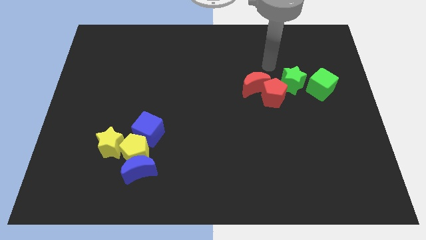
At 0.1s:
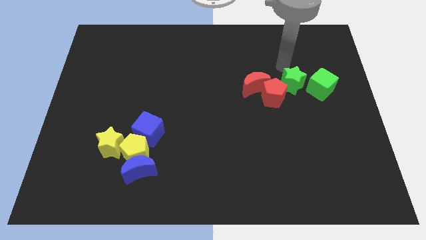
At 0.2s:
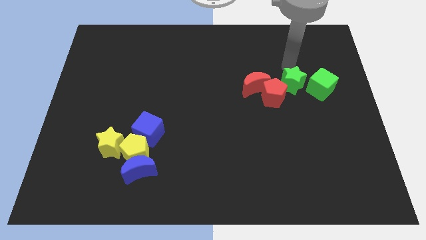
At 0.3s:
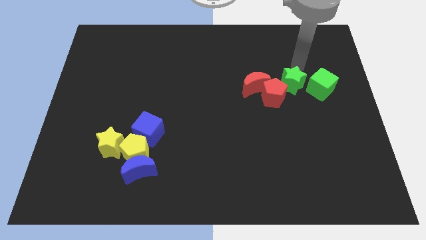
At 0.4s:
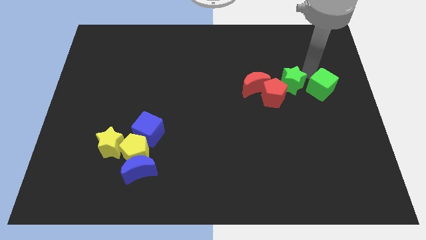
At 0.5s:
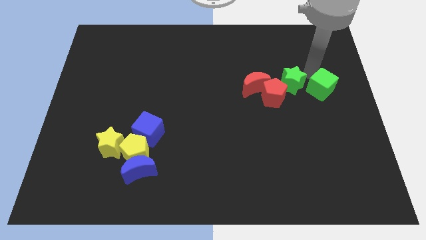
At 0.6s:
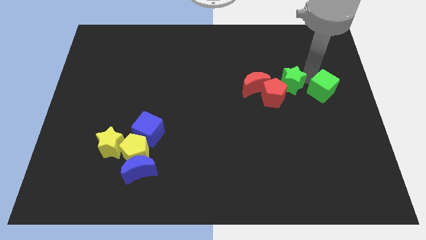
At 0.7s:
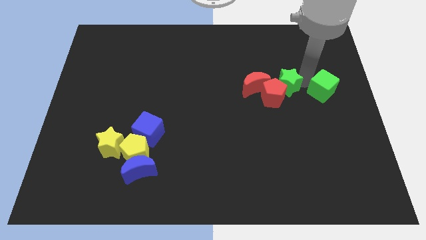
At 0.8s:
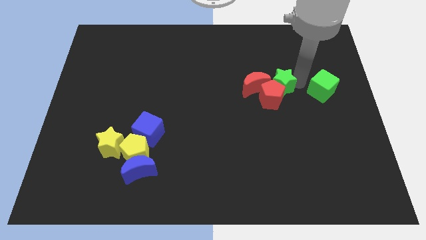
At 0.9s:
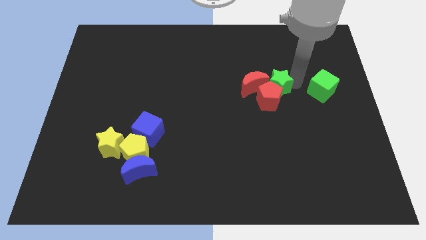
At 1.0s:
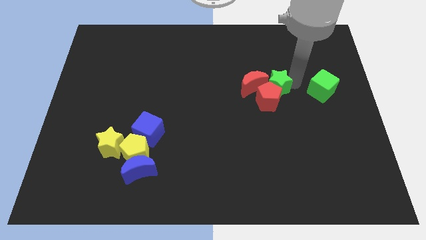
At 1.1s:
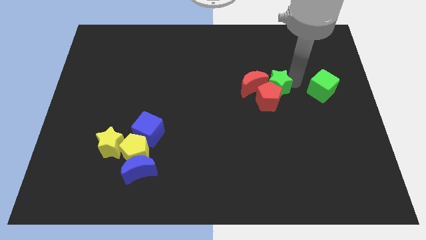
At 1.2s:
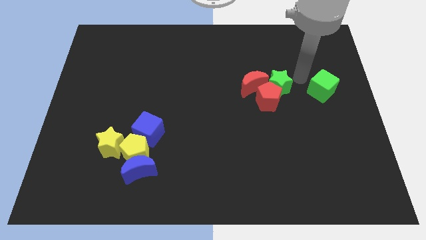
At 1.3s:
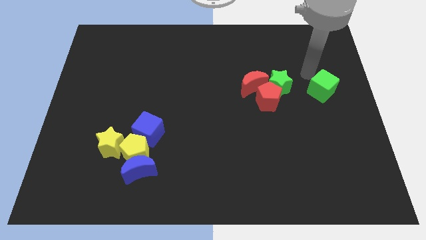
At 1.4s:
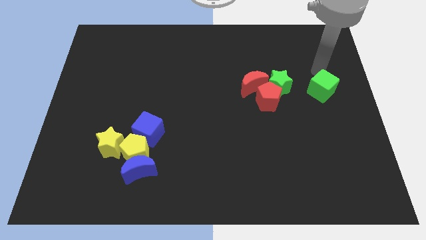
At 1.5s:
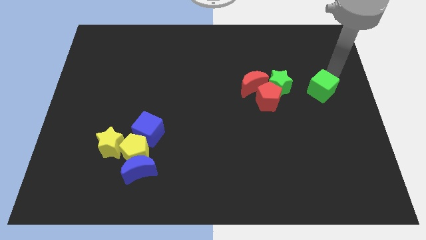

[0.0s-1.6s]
slight push the green star towards the top right of red pentagon

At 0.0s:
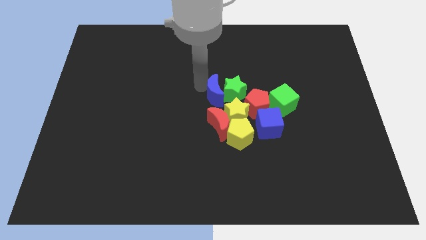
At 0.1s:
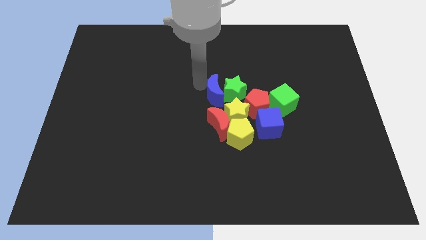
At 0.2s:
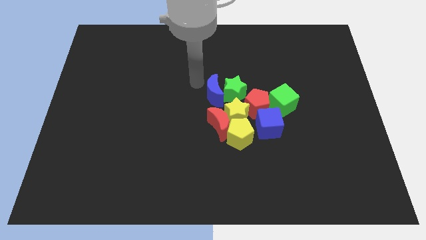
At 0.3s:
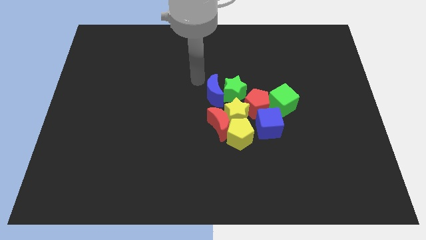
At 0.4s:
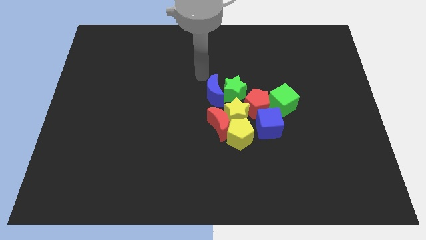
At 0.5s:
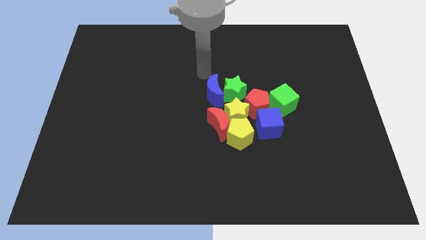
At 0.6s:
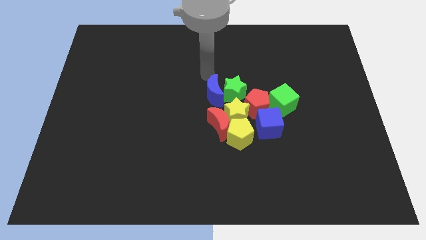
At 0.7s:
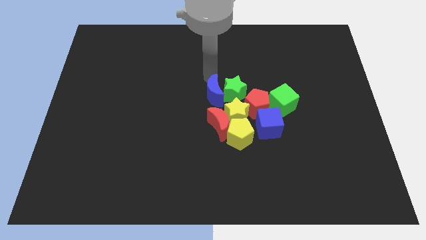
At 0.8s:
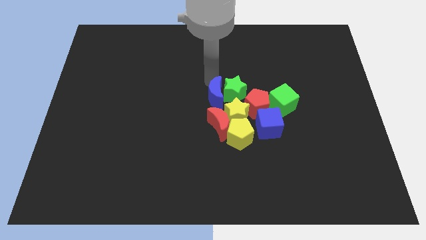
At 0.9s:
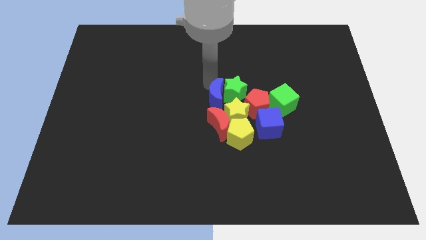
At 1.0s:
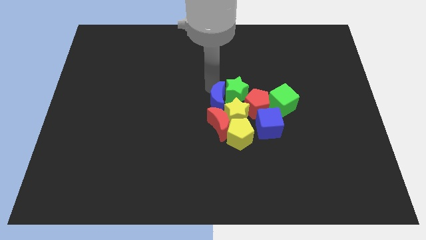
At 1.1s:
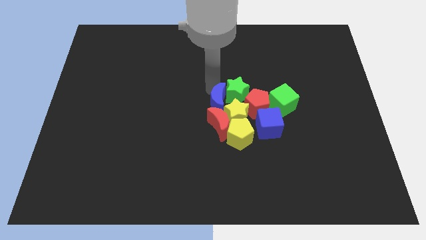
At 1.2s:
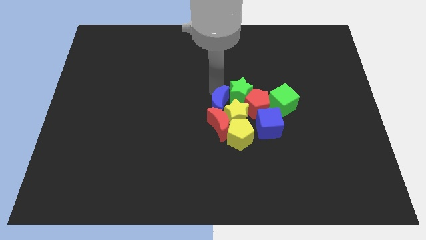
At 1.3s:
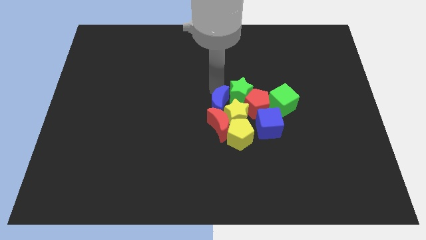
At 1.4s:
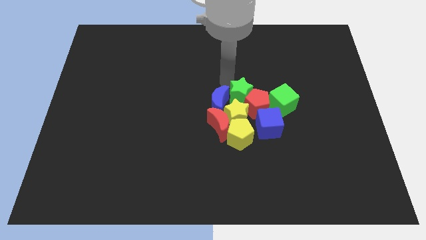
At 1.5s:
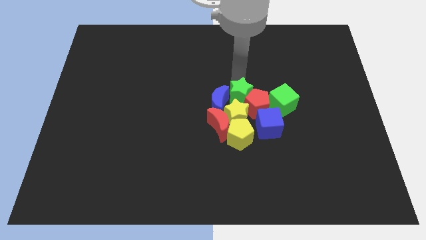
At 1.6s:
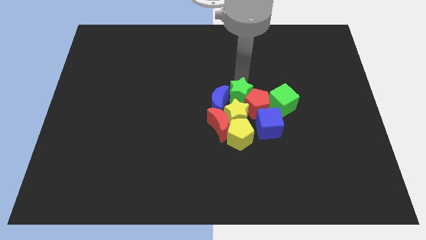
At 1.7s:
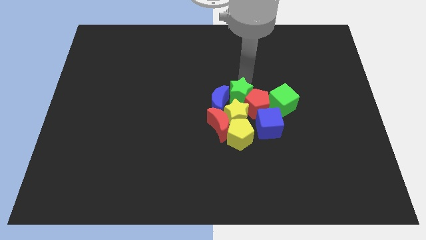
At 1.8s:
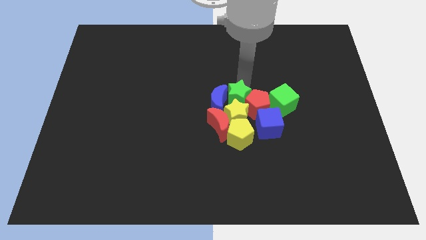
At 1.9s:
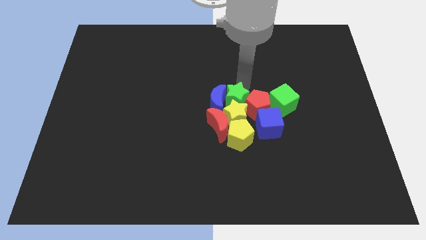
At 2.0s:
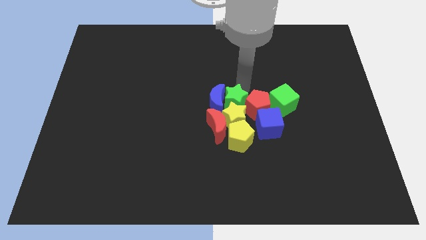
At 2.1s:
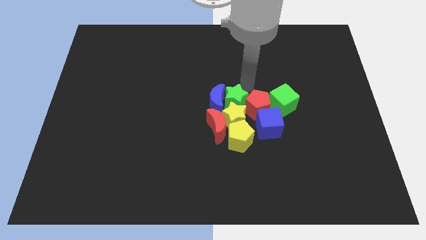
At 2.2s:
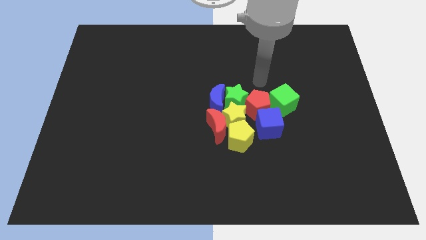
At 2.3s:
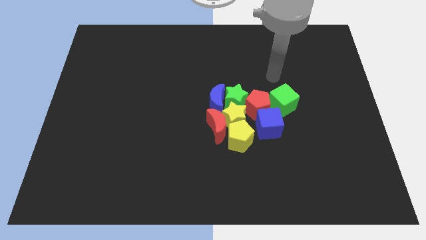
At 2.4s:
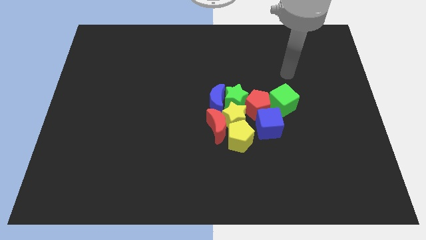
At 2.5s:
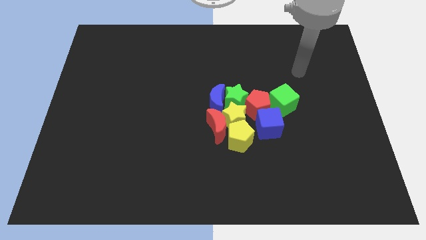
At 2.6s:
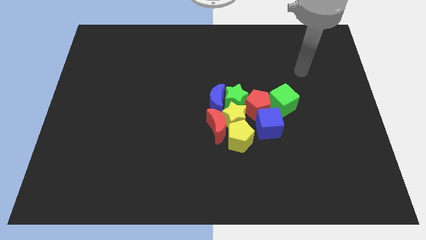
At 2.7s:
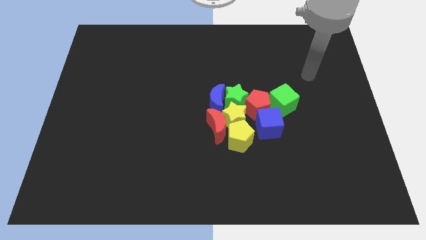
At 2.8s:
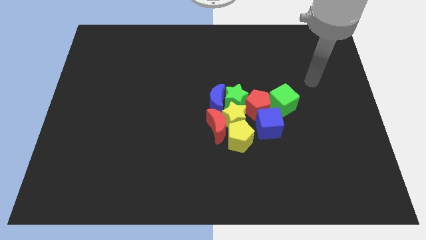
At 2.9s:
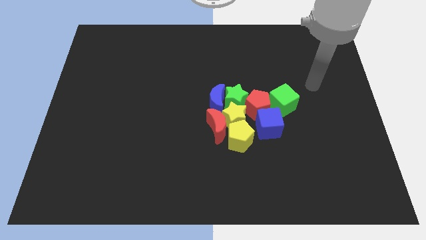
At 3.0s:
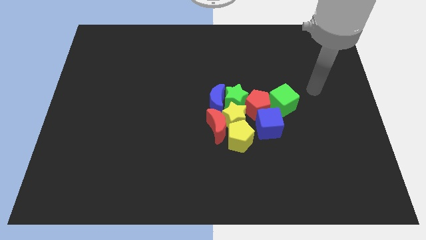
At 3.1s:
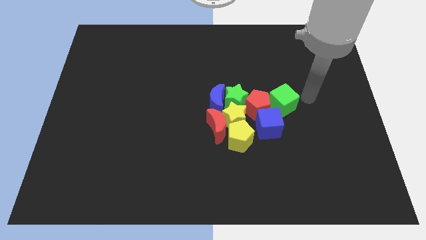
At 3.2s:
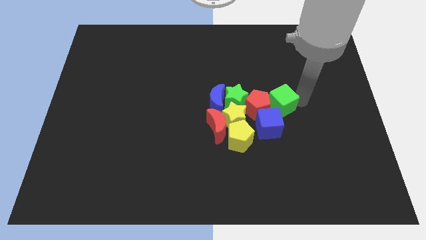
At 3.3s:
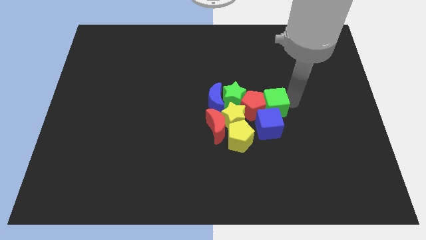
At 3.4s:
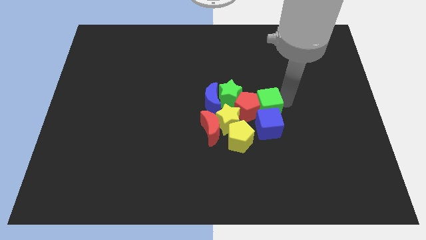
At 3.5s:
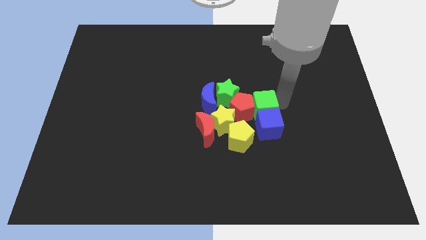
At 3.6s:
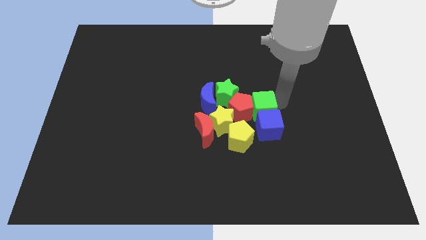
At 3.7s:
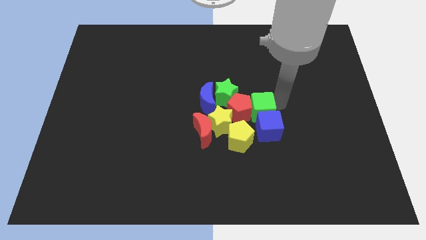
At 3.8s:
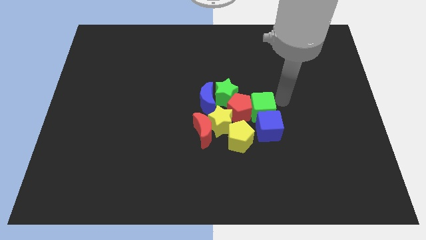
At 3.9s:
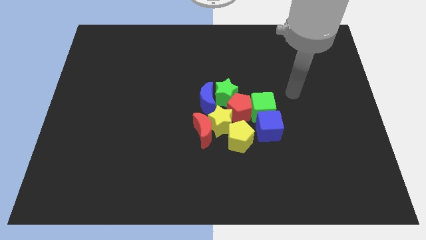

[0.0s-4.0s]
push the green cube slightly towards the right

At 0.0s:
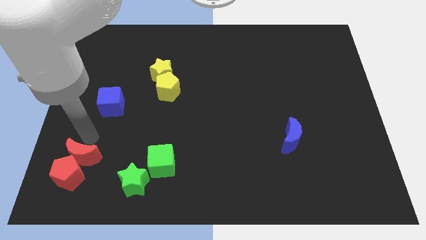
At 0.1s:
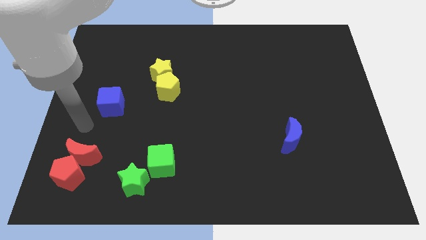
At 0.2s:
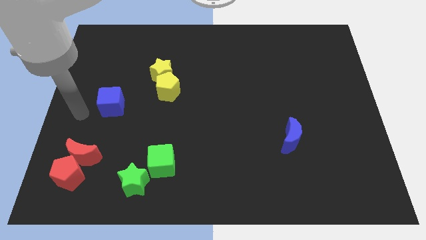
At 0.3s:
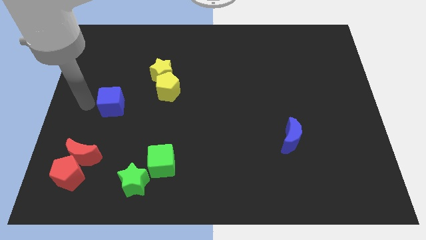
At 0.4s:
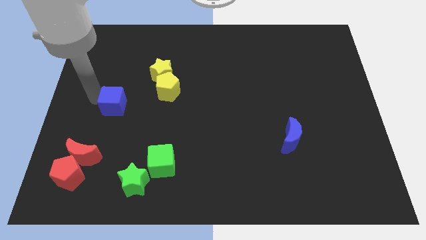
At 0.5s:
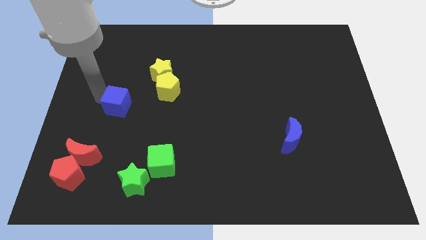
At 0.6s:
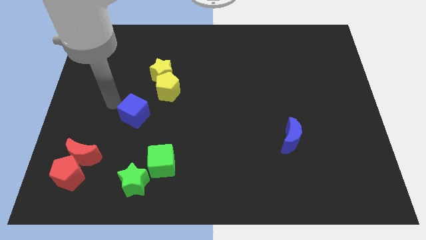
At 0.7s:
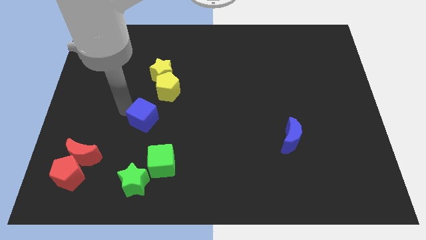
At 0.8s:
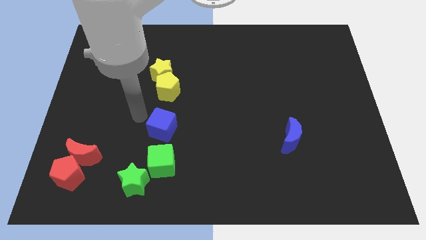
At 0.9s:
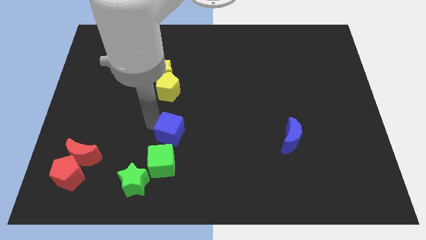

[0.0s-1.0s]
place the blue cube in between the yellow pentagon and green cube

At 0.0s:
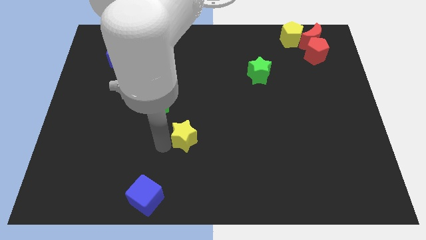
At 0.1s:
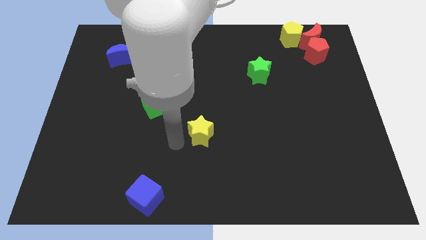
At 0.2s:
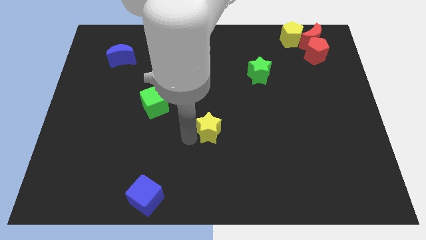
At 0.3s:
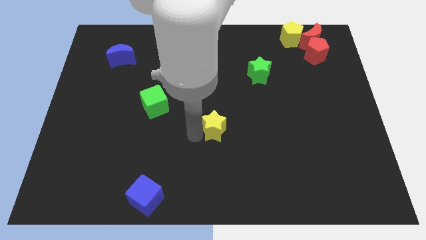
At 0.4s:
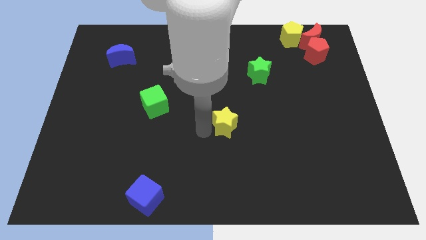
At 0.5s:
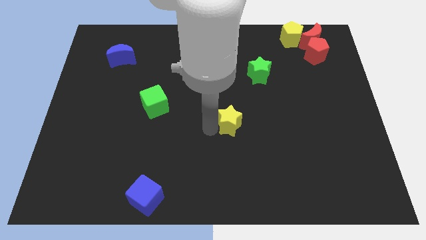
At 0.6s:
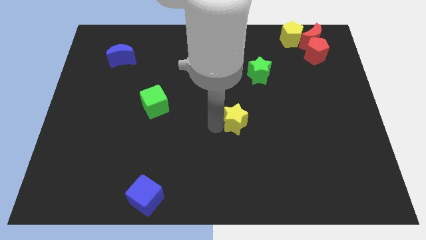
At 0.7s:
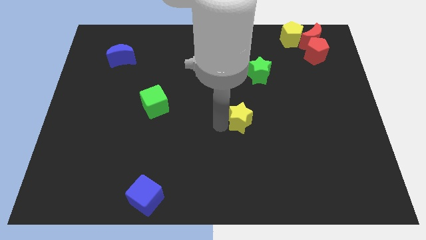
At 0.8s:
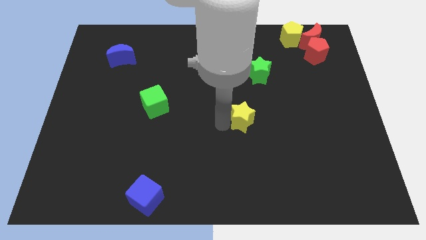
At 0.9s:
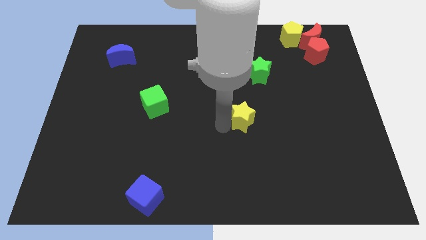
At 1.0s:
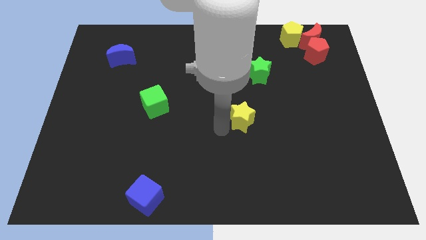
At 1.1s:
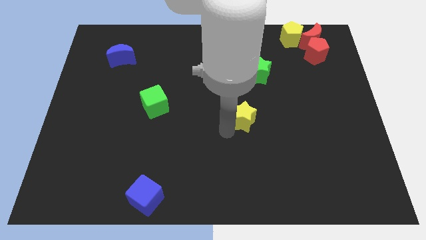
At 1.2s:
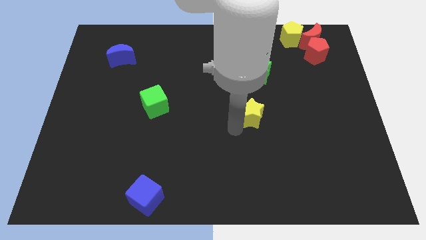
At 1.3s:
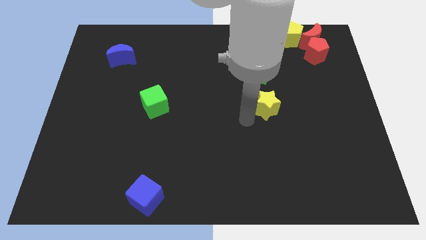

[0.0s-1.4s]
place the yellow star below green star

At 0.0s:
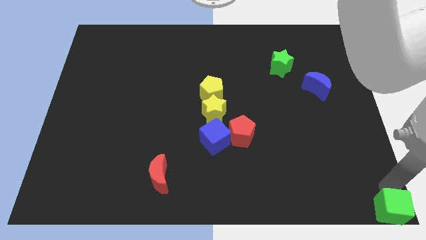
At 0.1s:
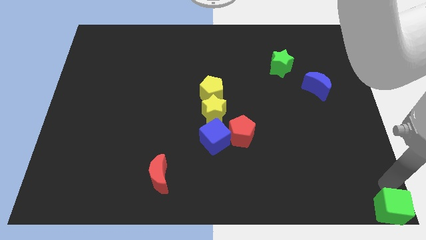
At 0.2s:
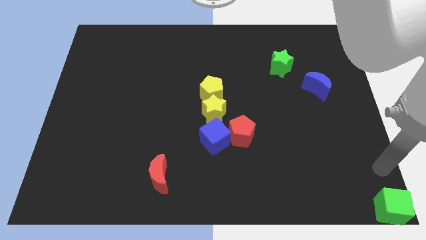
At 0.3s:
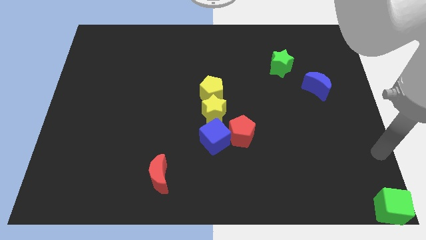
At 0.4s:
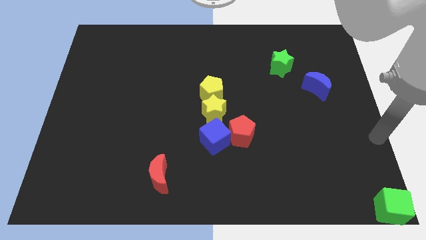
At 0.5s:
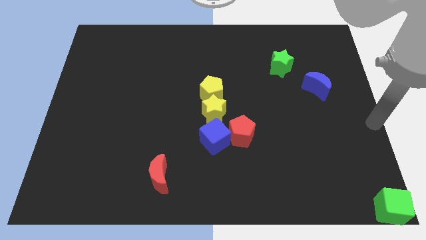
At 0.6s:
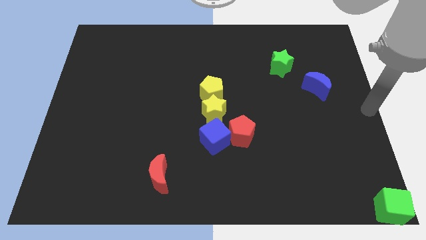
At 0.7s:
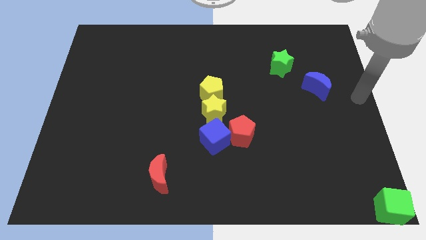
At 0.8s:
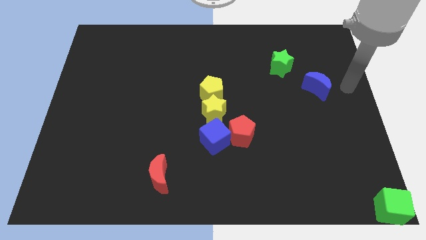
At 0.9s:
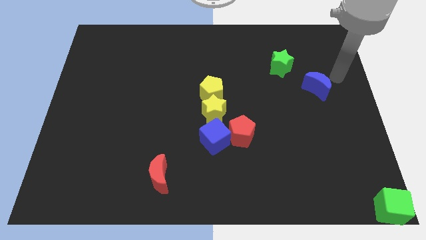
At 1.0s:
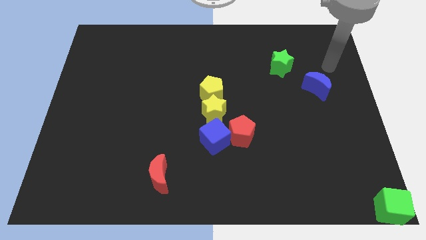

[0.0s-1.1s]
go away from the green cube

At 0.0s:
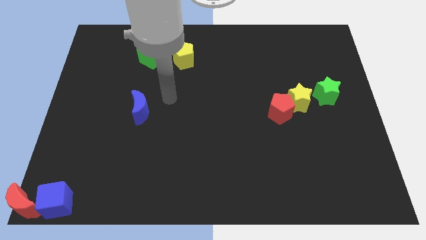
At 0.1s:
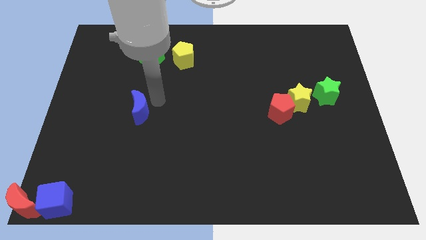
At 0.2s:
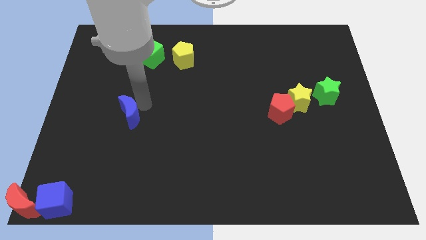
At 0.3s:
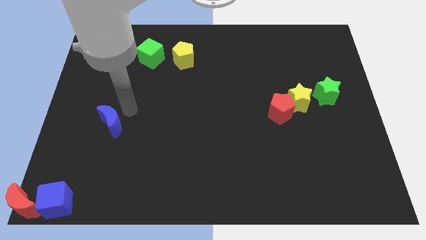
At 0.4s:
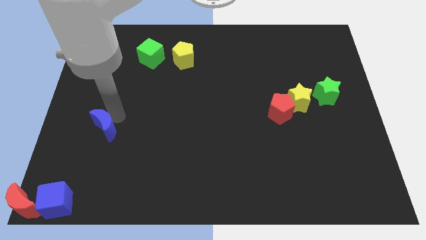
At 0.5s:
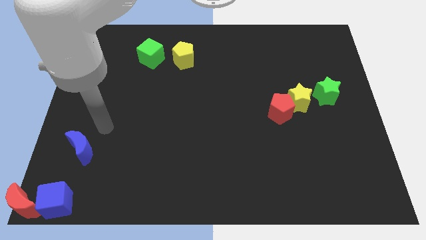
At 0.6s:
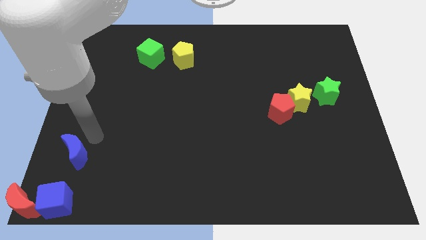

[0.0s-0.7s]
push the blue crescent towards the bottom left
